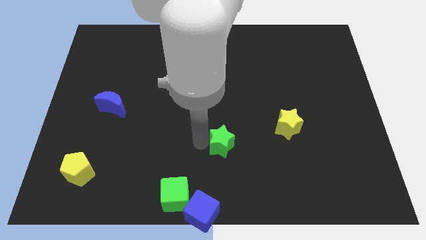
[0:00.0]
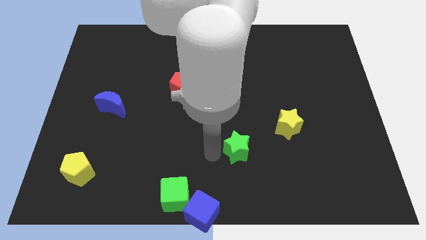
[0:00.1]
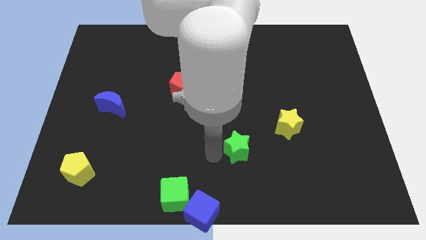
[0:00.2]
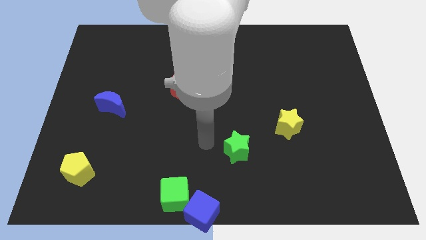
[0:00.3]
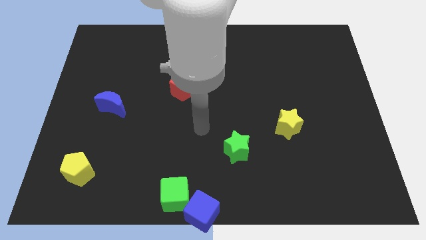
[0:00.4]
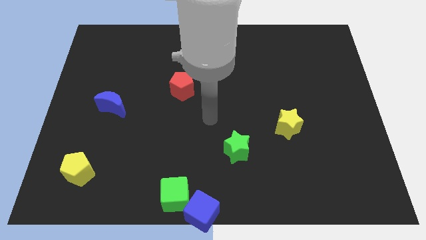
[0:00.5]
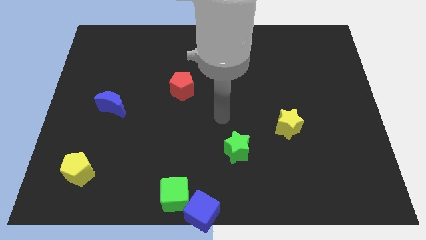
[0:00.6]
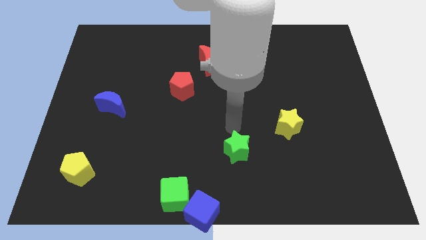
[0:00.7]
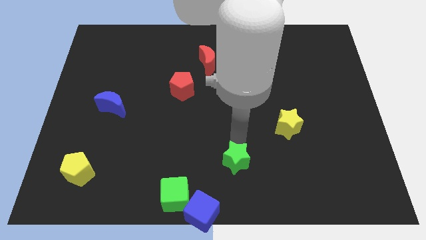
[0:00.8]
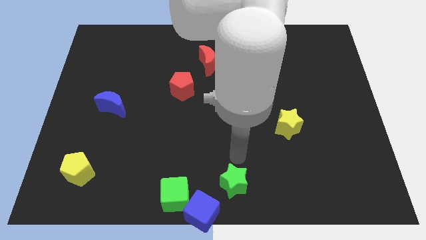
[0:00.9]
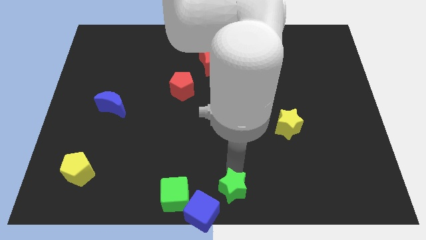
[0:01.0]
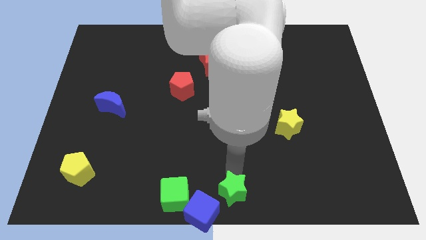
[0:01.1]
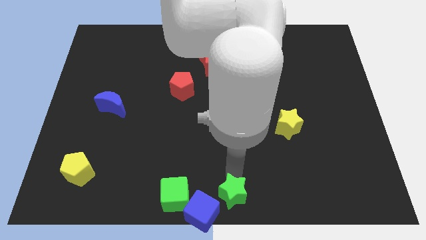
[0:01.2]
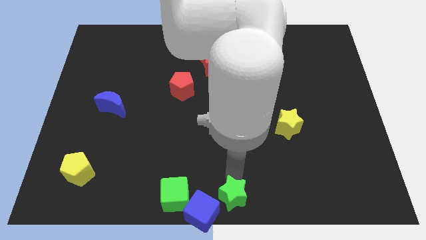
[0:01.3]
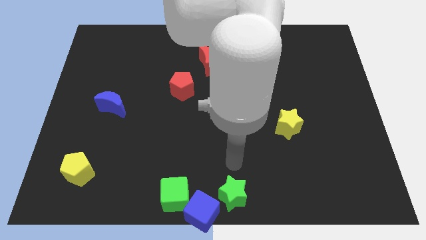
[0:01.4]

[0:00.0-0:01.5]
move the green star to the top right side of the blue cube

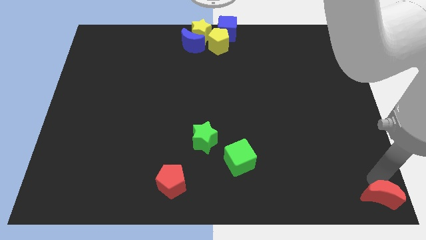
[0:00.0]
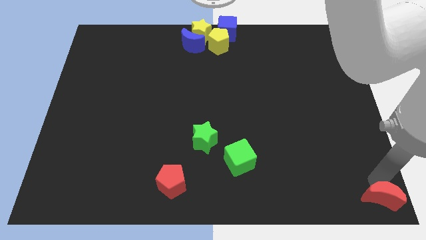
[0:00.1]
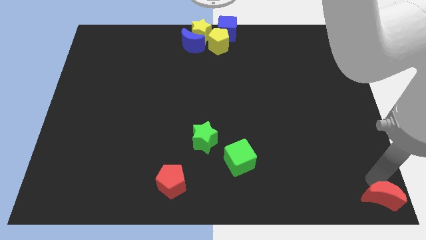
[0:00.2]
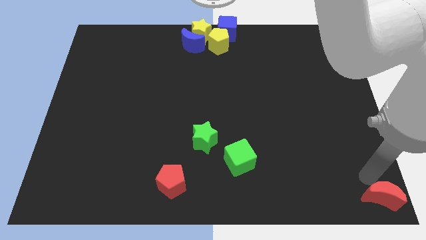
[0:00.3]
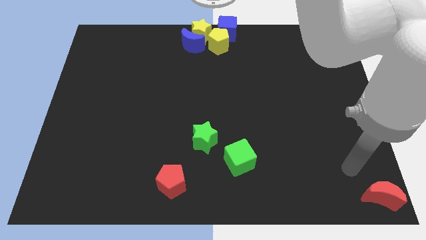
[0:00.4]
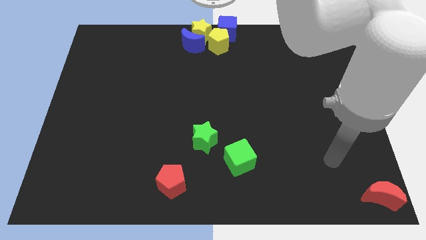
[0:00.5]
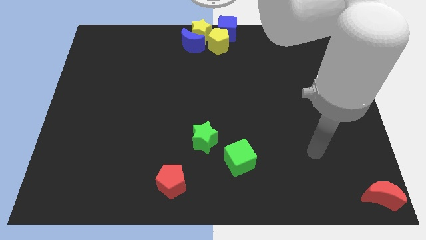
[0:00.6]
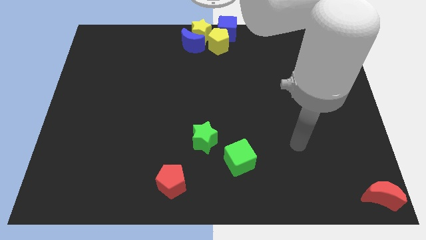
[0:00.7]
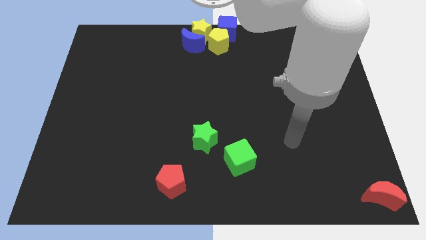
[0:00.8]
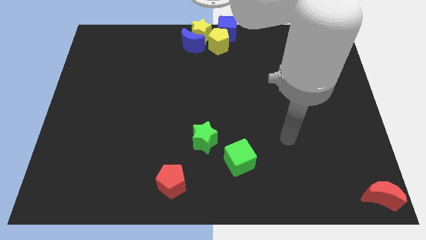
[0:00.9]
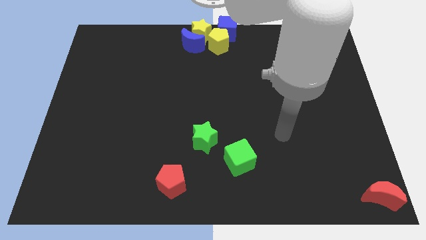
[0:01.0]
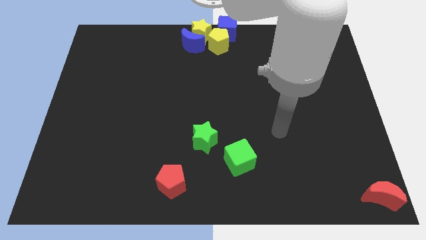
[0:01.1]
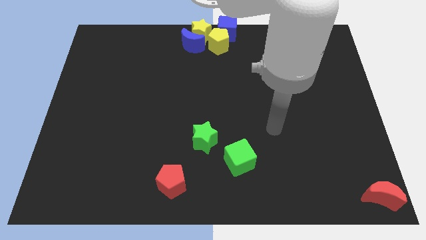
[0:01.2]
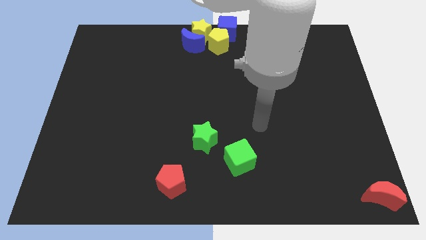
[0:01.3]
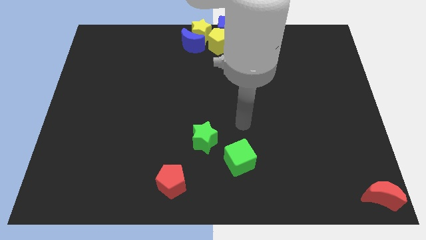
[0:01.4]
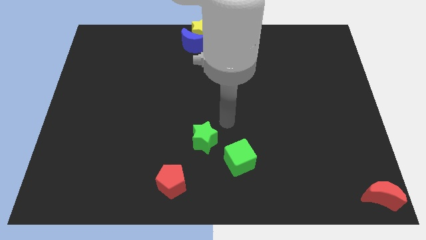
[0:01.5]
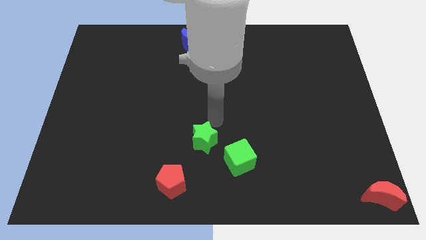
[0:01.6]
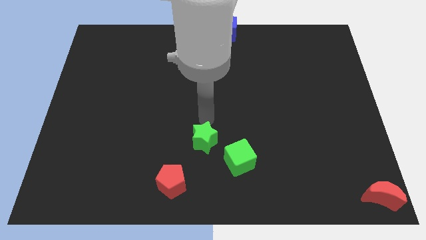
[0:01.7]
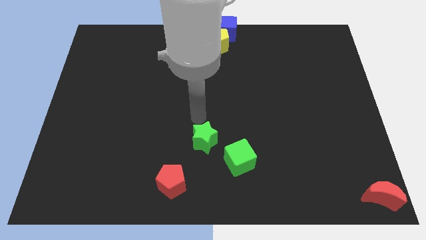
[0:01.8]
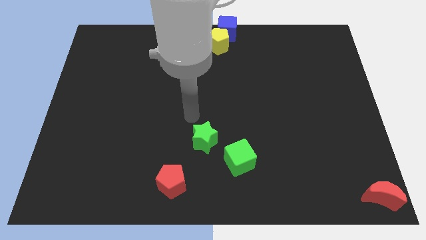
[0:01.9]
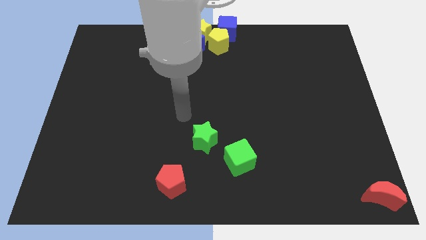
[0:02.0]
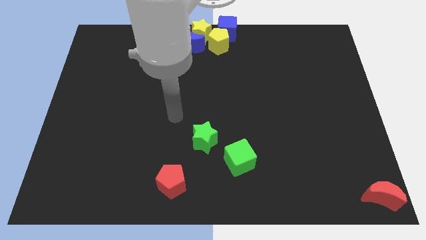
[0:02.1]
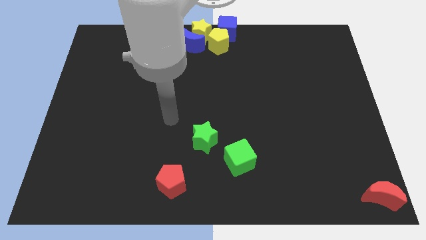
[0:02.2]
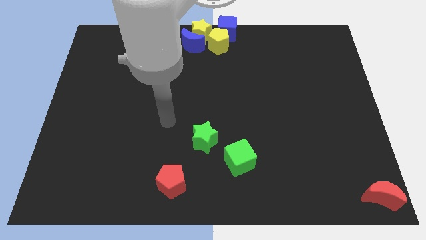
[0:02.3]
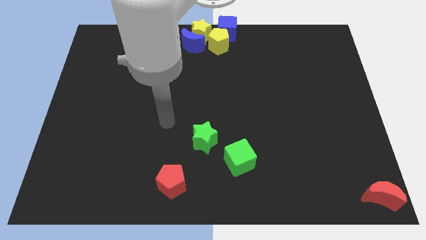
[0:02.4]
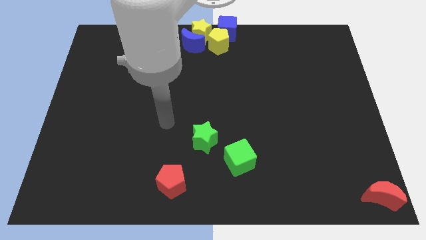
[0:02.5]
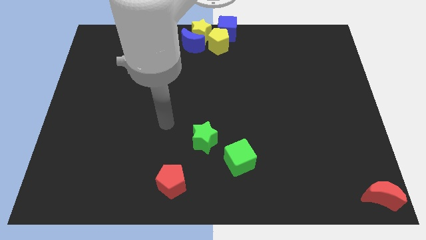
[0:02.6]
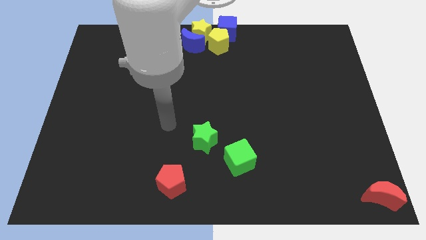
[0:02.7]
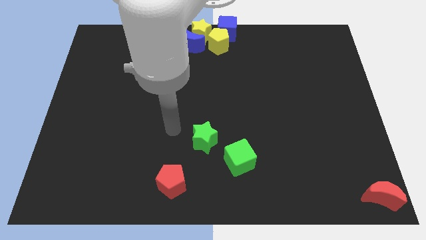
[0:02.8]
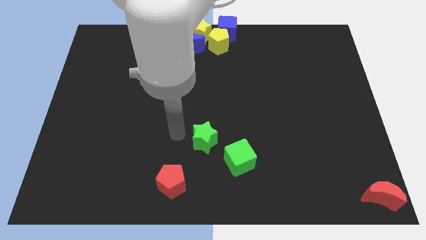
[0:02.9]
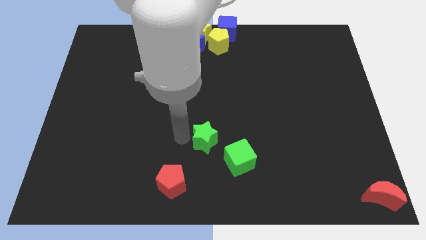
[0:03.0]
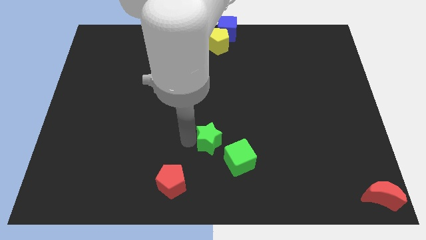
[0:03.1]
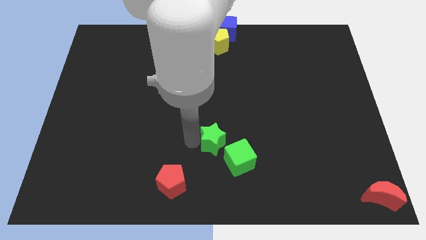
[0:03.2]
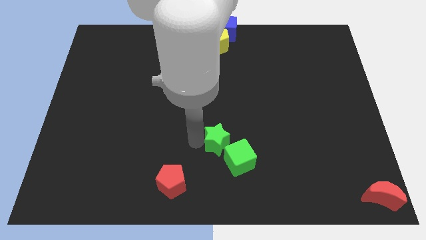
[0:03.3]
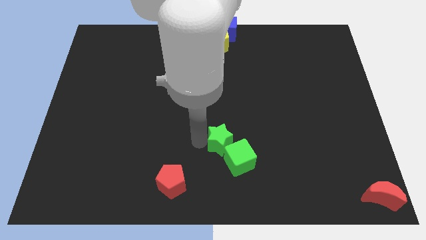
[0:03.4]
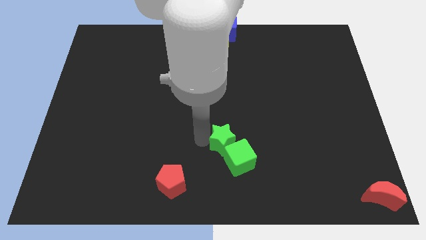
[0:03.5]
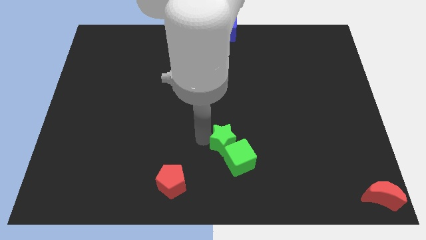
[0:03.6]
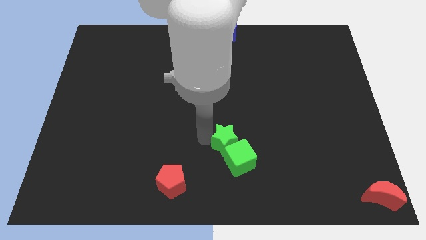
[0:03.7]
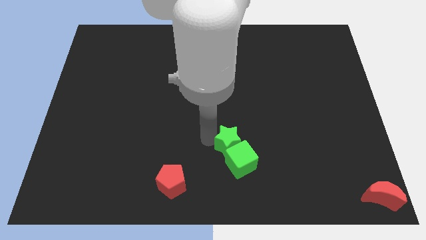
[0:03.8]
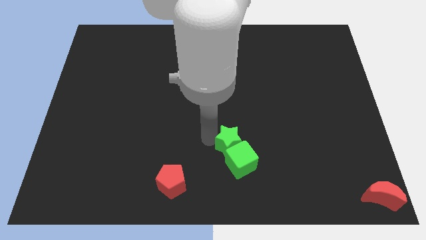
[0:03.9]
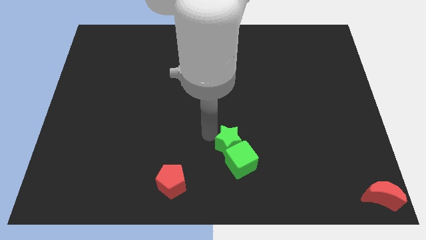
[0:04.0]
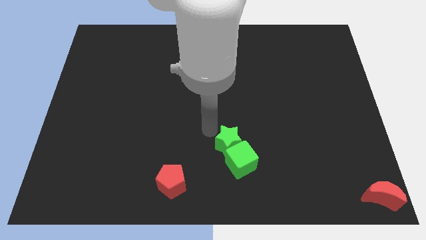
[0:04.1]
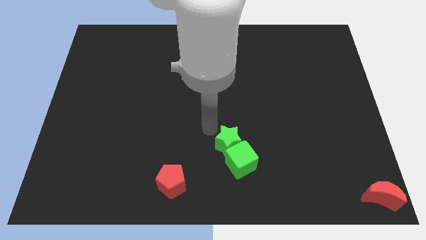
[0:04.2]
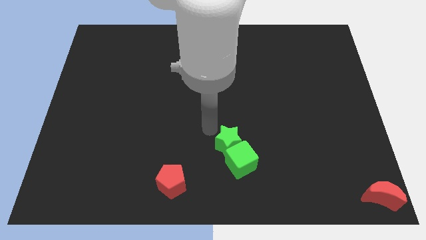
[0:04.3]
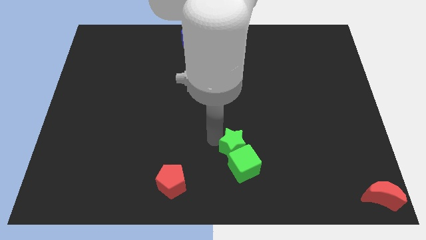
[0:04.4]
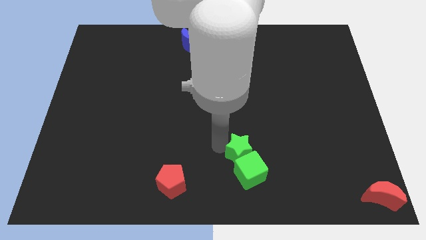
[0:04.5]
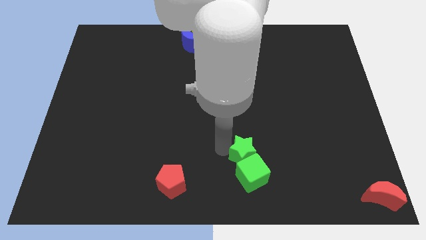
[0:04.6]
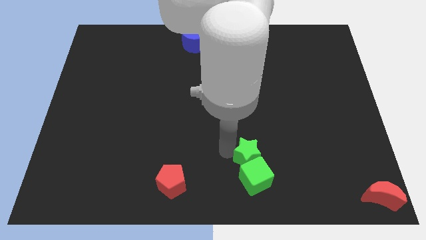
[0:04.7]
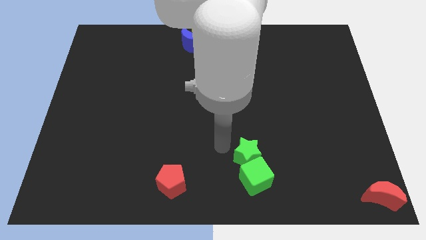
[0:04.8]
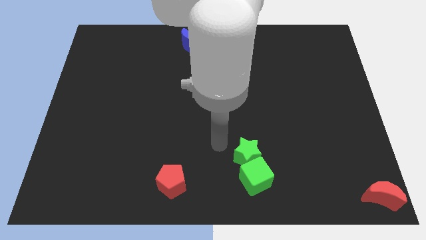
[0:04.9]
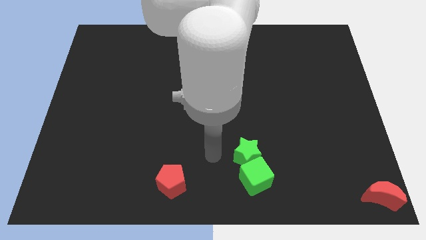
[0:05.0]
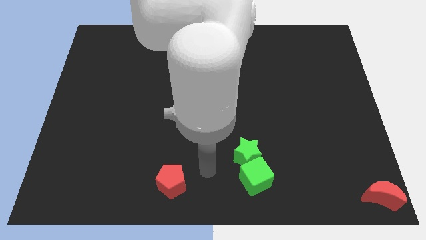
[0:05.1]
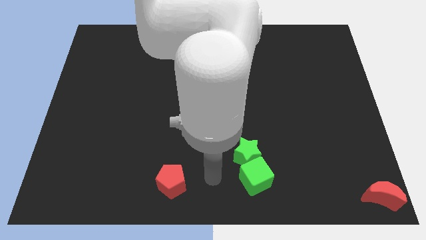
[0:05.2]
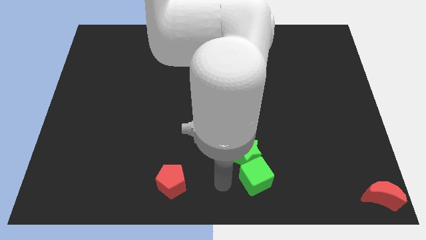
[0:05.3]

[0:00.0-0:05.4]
push the green star into the green cube

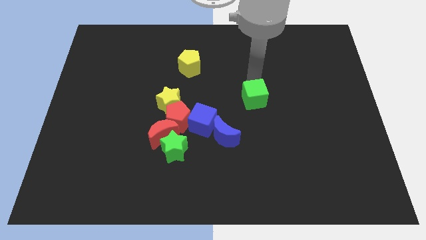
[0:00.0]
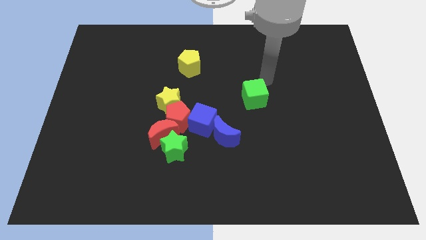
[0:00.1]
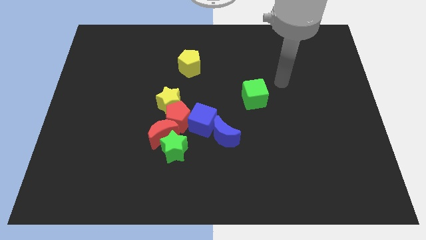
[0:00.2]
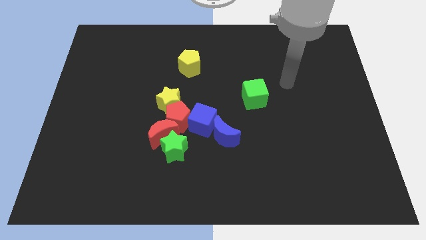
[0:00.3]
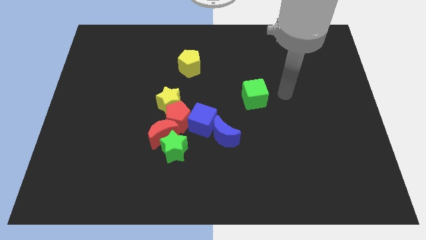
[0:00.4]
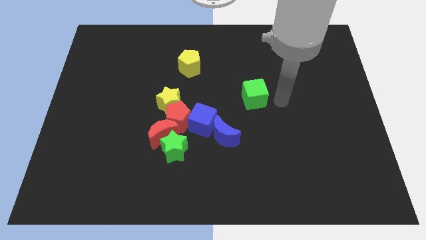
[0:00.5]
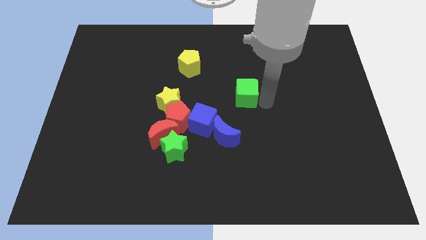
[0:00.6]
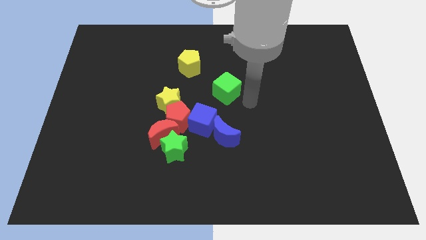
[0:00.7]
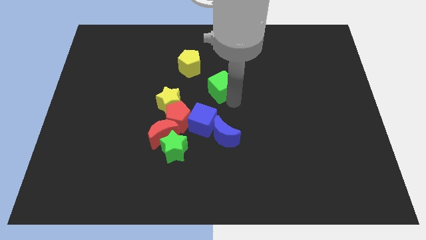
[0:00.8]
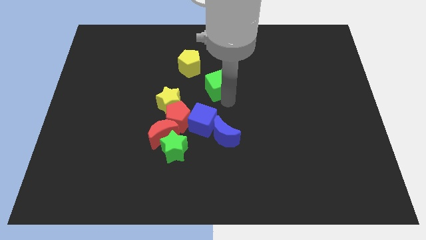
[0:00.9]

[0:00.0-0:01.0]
push green cube towards yellow pentagon

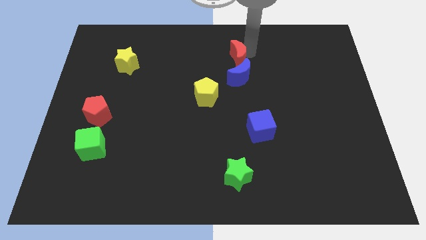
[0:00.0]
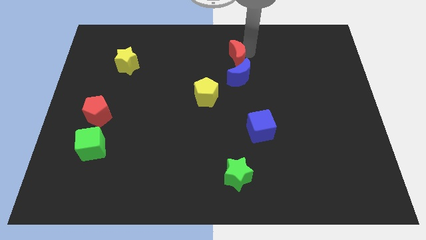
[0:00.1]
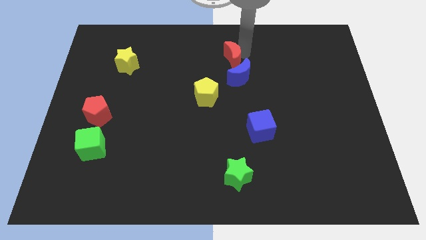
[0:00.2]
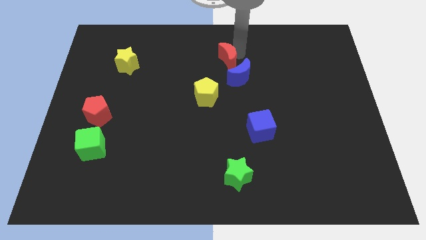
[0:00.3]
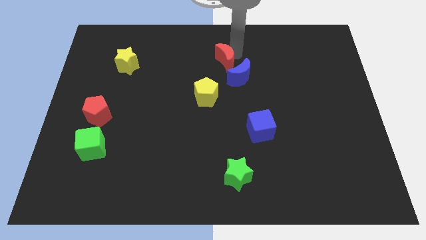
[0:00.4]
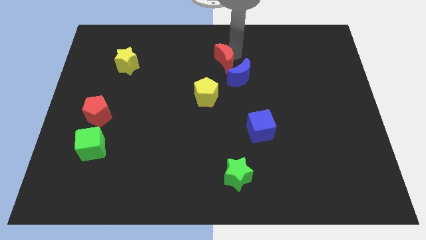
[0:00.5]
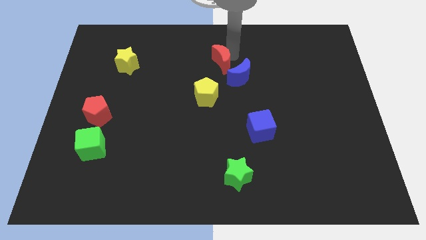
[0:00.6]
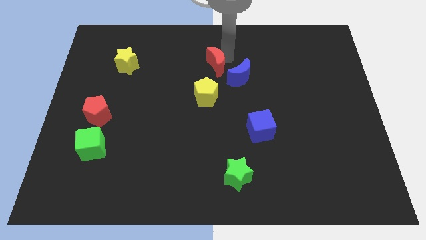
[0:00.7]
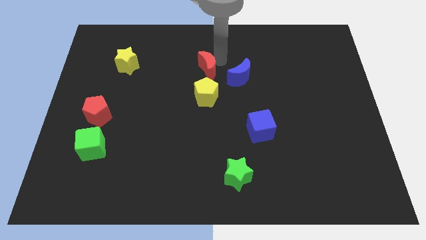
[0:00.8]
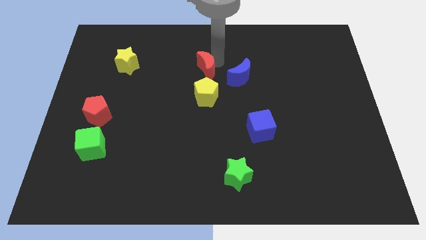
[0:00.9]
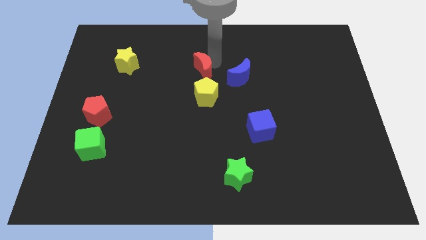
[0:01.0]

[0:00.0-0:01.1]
put the red moon to the top of yellow pentagon

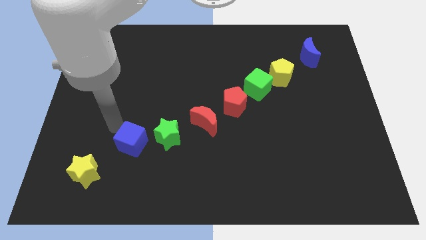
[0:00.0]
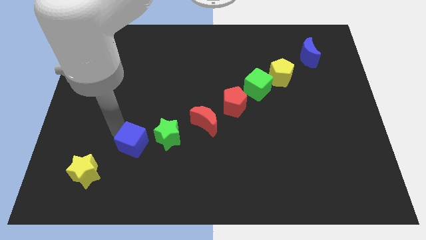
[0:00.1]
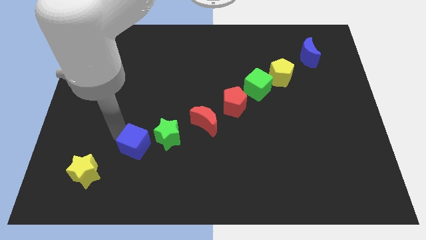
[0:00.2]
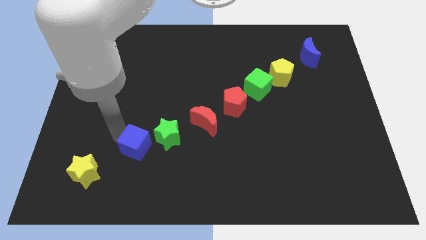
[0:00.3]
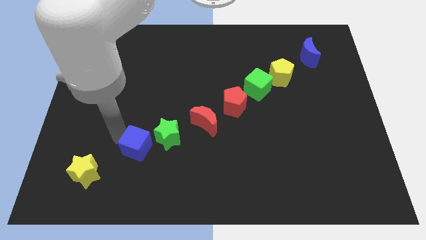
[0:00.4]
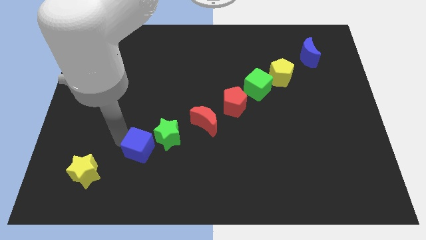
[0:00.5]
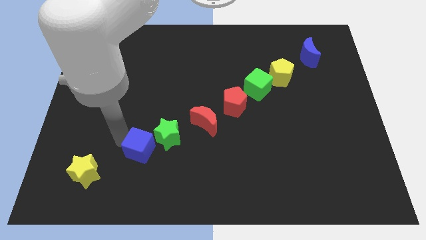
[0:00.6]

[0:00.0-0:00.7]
place the blue cube diagonally to the green star
